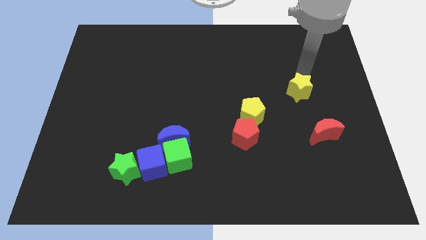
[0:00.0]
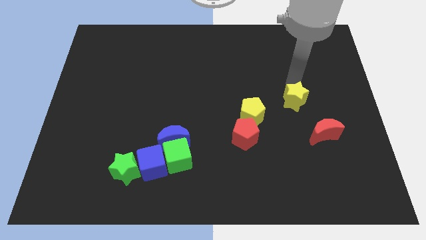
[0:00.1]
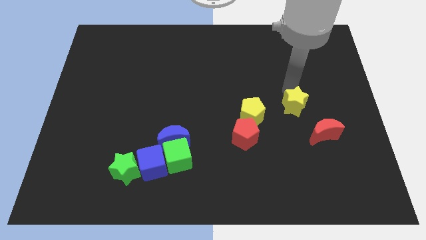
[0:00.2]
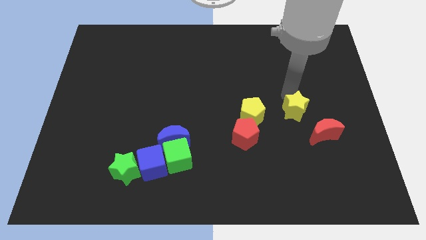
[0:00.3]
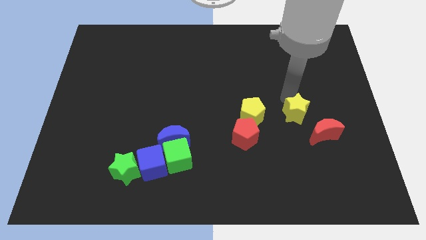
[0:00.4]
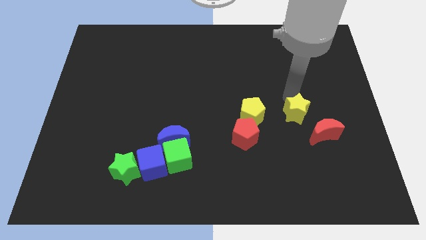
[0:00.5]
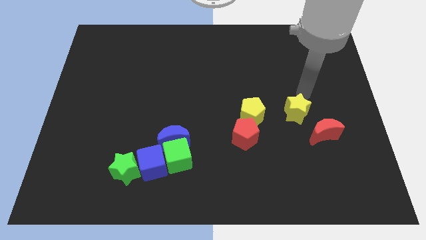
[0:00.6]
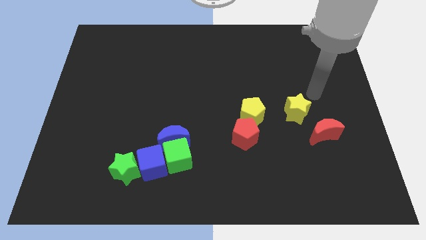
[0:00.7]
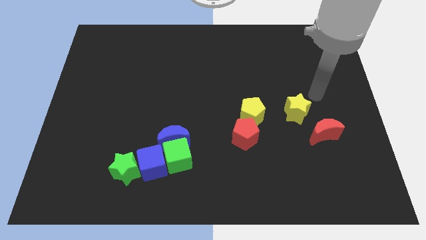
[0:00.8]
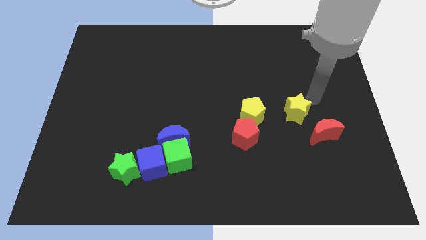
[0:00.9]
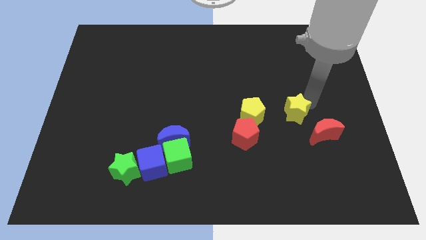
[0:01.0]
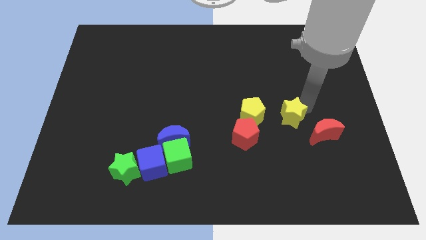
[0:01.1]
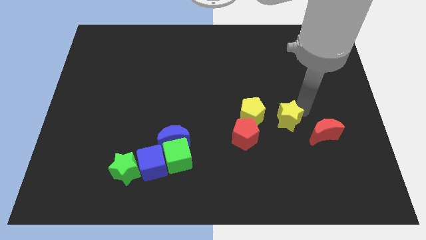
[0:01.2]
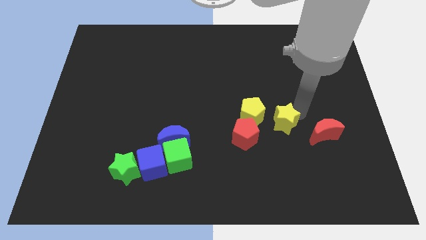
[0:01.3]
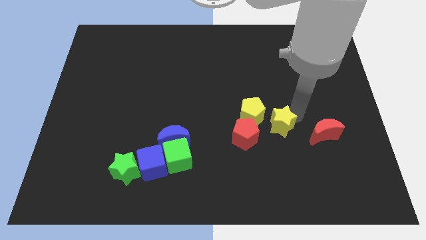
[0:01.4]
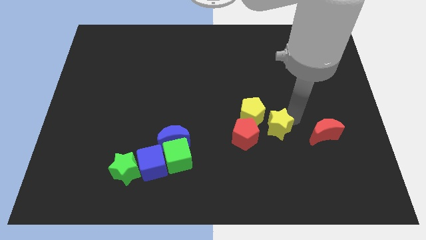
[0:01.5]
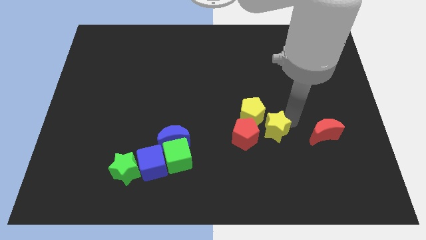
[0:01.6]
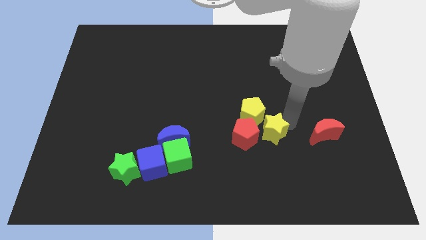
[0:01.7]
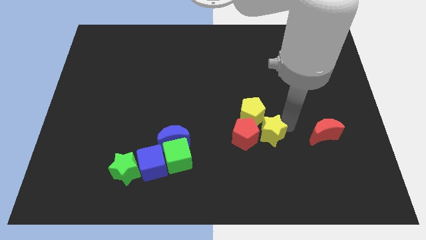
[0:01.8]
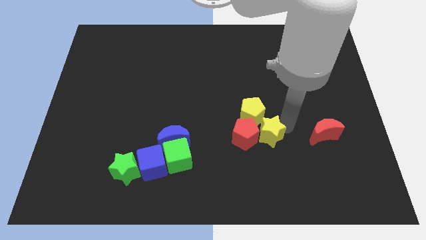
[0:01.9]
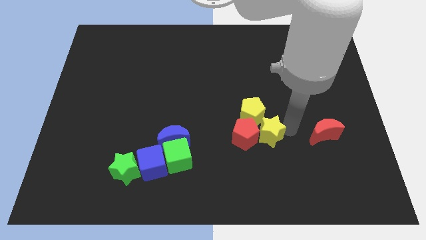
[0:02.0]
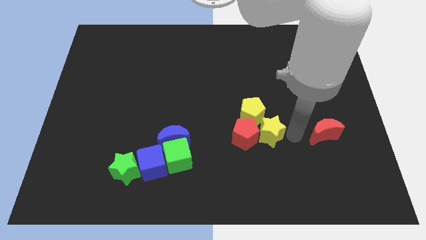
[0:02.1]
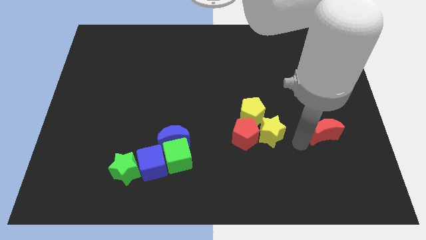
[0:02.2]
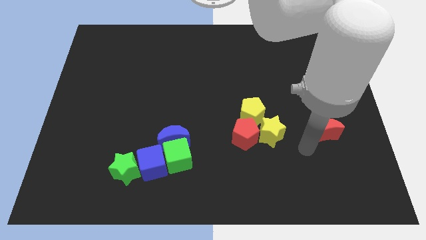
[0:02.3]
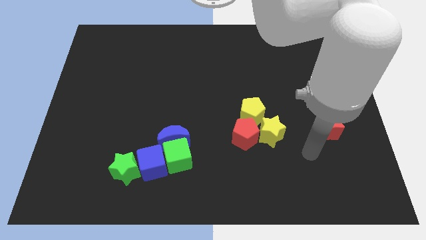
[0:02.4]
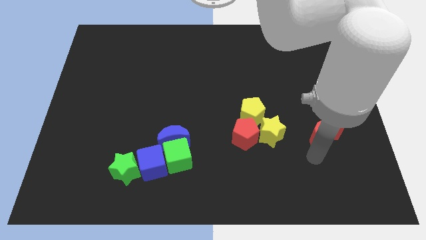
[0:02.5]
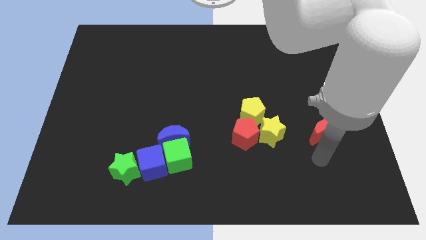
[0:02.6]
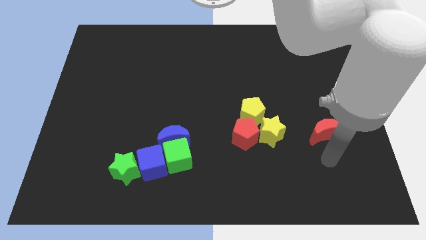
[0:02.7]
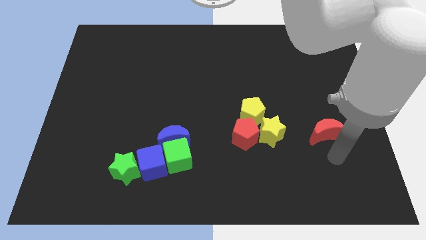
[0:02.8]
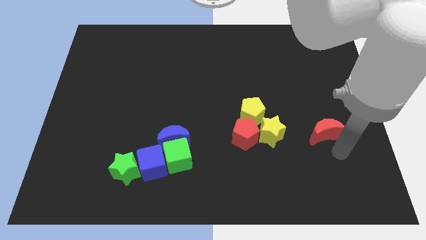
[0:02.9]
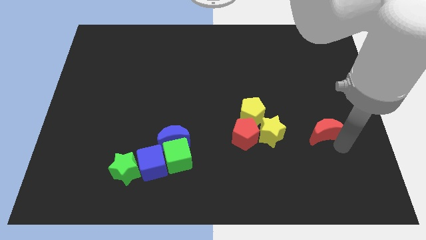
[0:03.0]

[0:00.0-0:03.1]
place the yellow star in between the red blocks

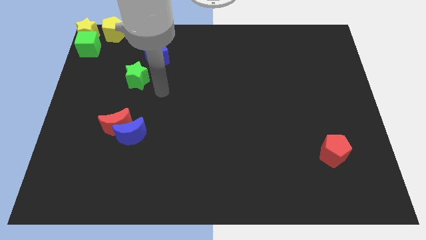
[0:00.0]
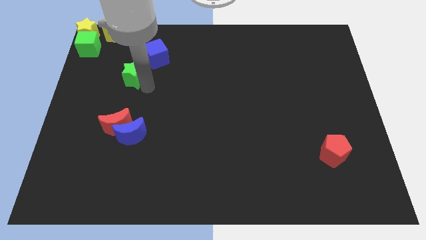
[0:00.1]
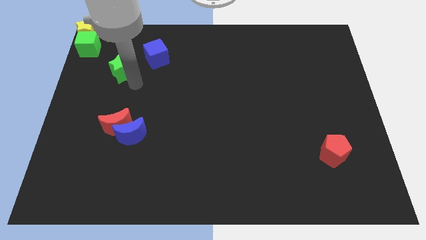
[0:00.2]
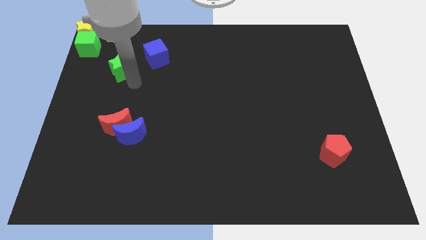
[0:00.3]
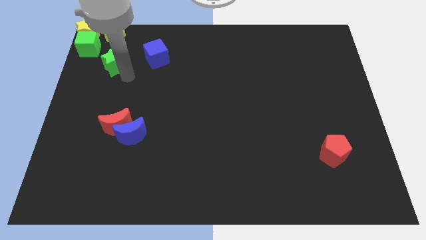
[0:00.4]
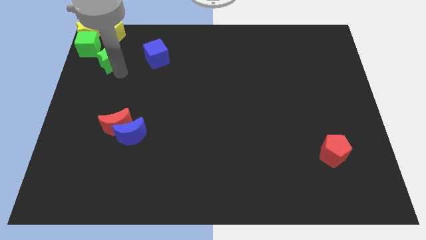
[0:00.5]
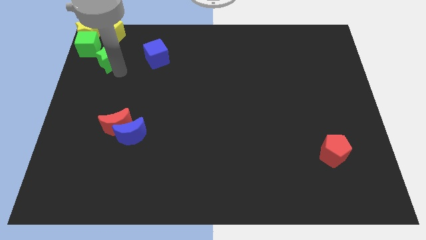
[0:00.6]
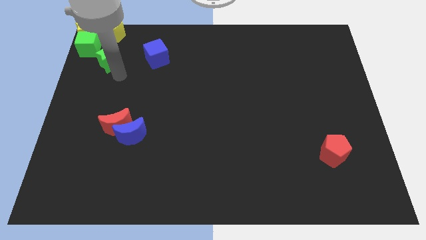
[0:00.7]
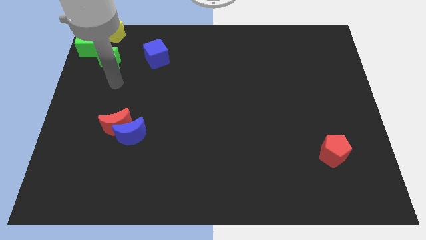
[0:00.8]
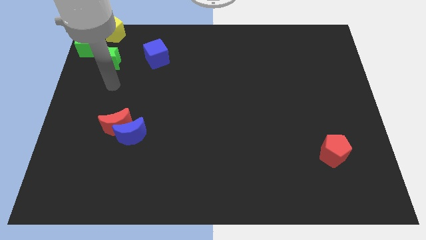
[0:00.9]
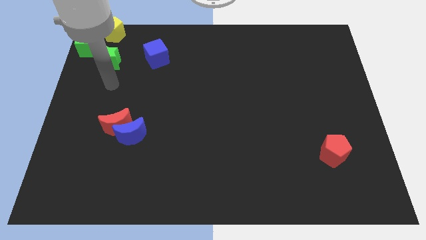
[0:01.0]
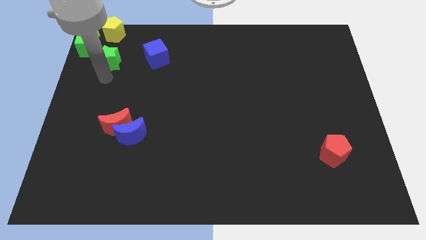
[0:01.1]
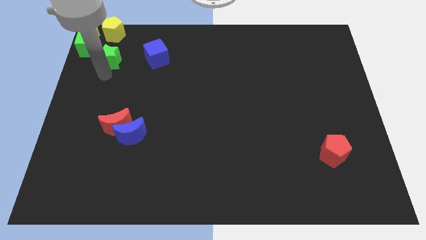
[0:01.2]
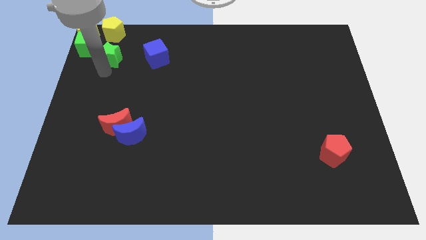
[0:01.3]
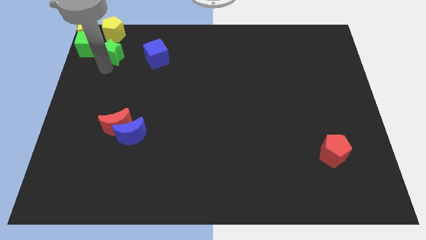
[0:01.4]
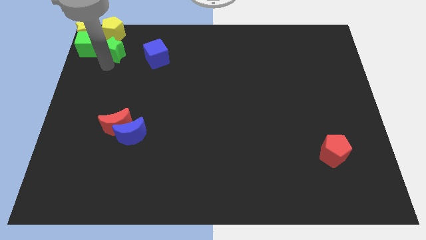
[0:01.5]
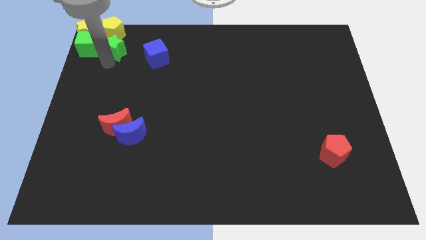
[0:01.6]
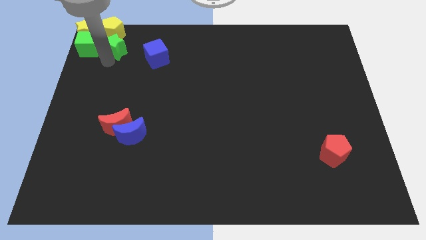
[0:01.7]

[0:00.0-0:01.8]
slide the green star to the bottom side of the yellow pentagon

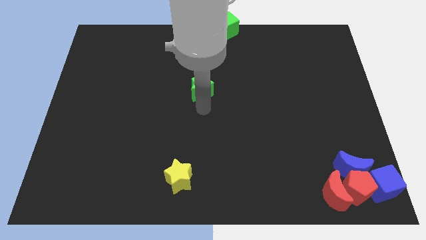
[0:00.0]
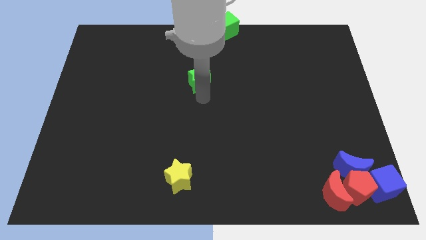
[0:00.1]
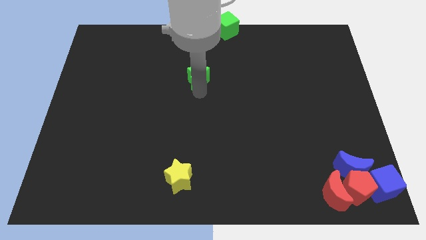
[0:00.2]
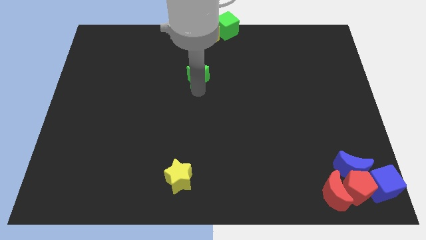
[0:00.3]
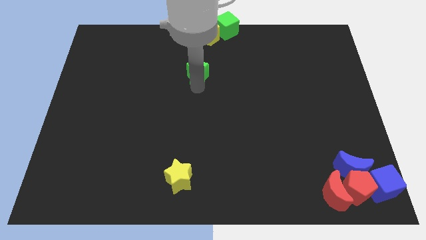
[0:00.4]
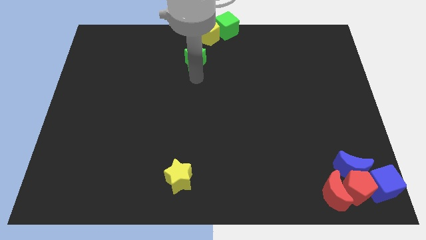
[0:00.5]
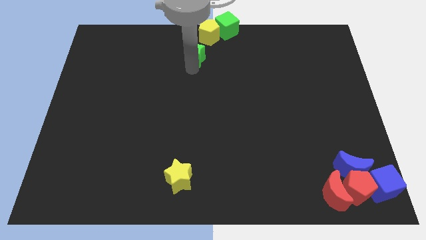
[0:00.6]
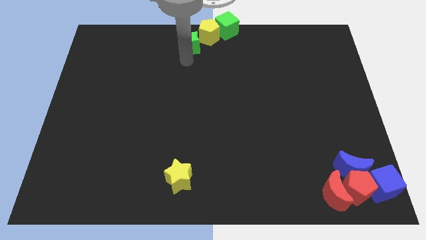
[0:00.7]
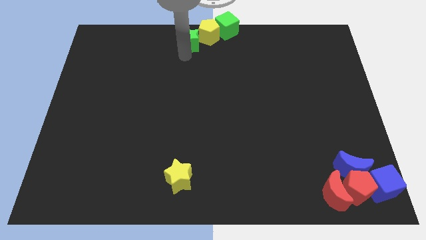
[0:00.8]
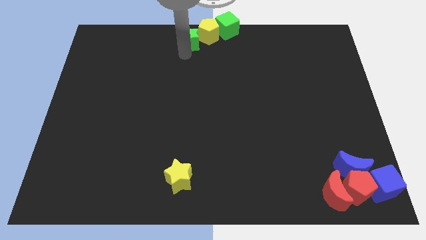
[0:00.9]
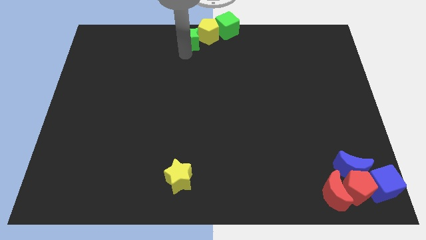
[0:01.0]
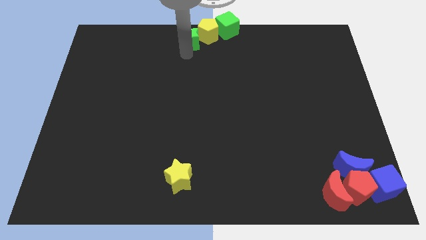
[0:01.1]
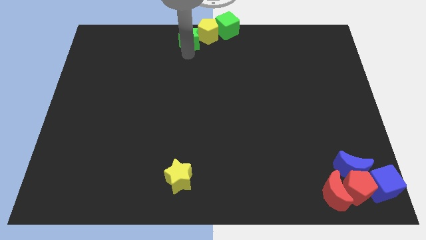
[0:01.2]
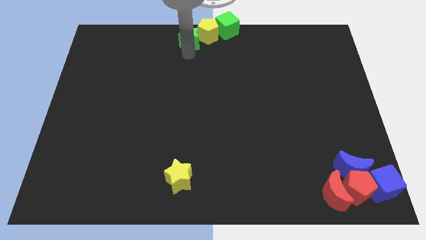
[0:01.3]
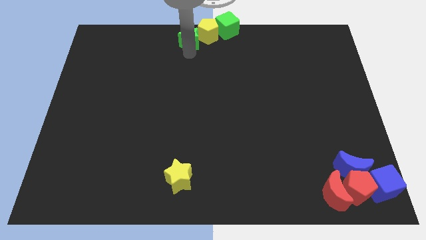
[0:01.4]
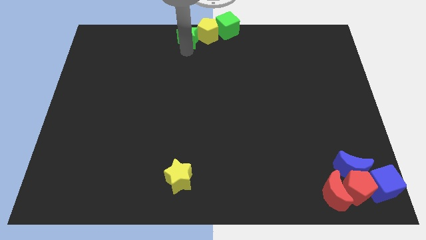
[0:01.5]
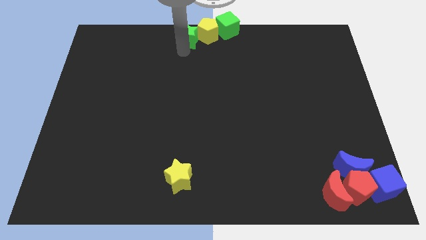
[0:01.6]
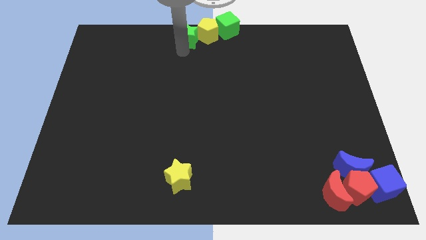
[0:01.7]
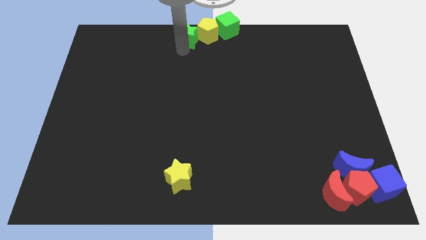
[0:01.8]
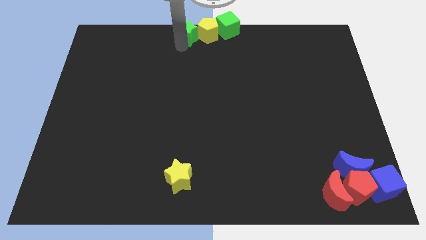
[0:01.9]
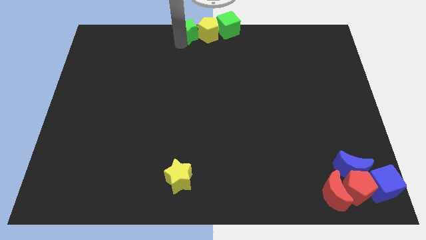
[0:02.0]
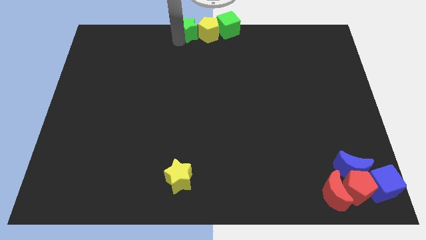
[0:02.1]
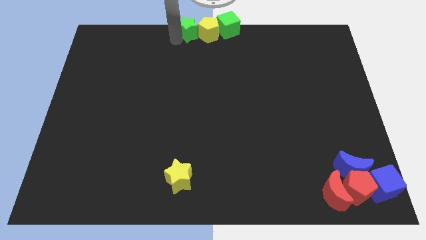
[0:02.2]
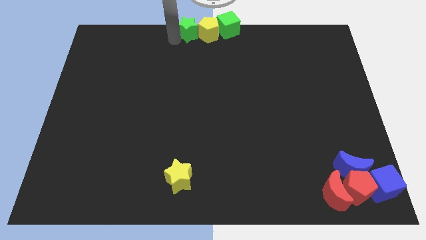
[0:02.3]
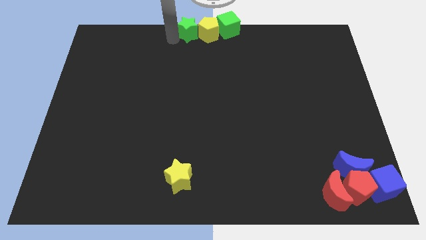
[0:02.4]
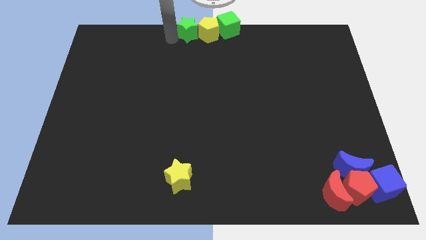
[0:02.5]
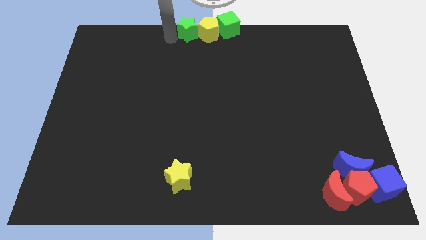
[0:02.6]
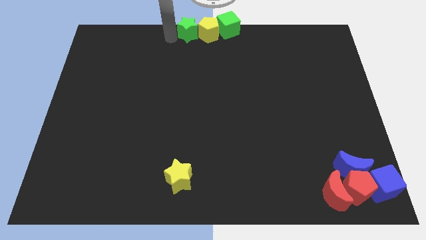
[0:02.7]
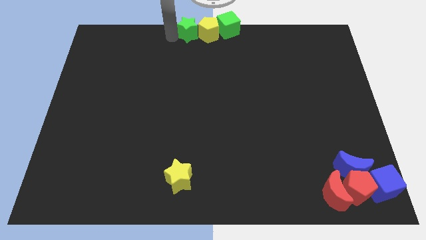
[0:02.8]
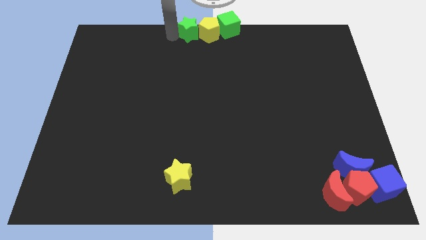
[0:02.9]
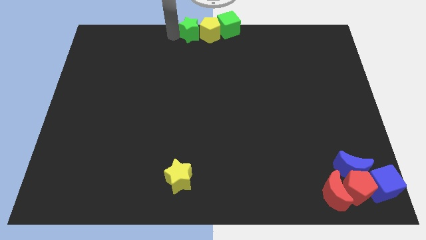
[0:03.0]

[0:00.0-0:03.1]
place green star besid eyellow pentagon

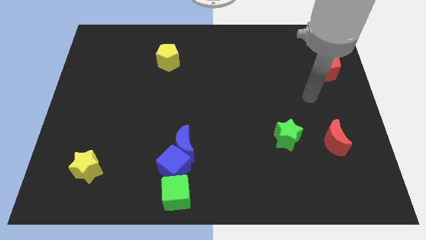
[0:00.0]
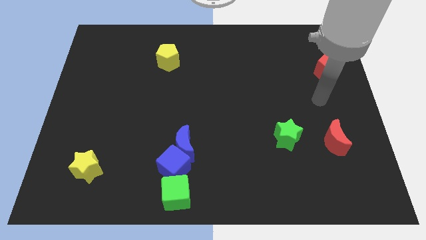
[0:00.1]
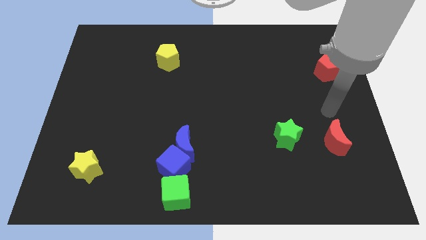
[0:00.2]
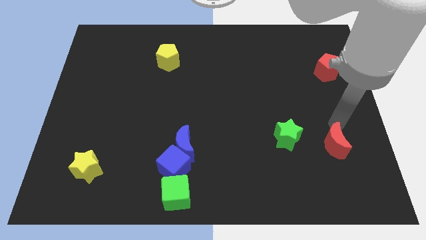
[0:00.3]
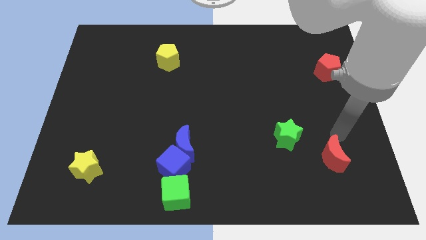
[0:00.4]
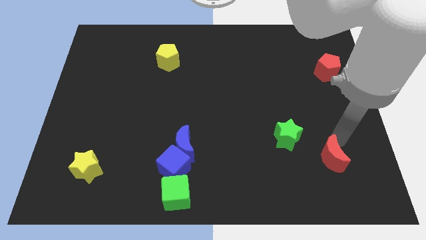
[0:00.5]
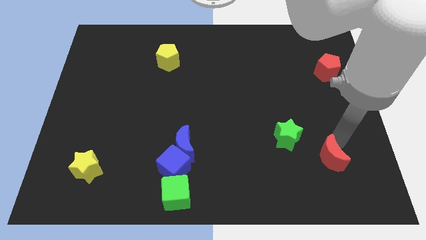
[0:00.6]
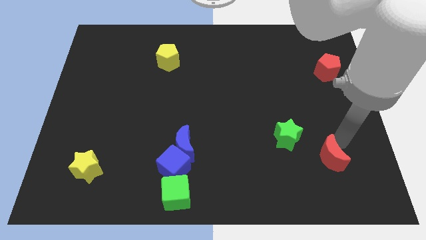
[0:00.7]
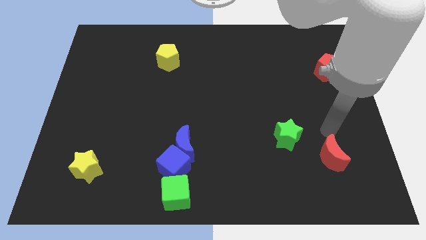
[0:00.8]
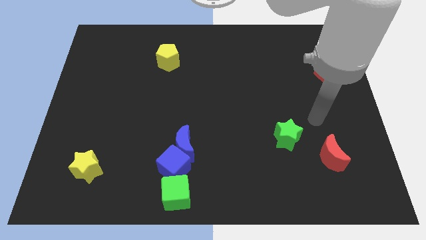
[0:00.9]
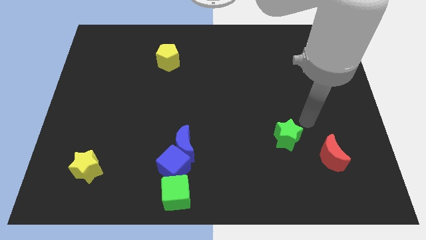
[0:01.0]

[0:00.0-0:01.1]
place your arm to the top right side of the green star
